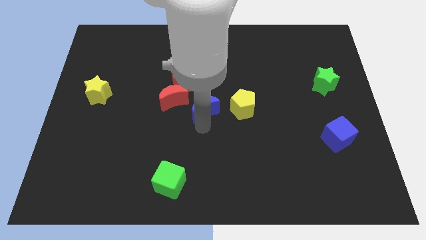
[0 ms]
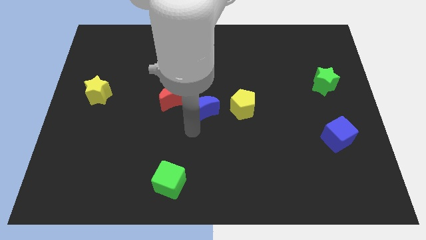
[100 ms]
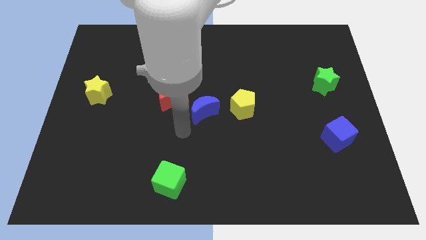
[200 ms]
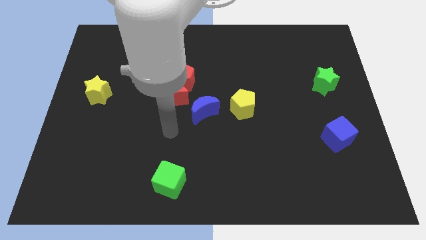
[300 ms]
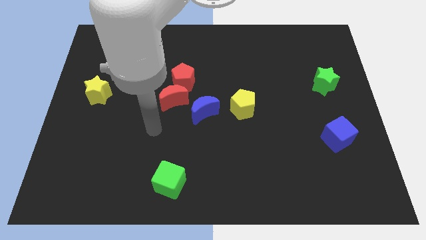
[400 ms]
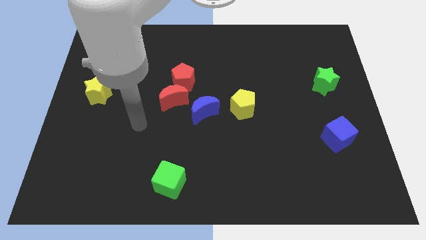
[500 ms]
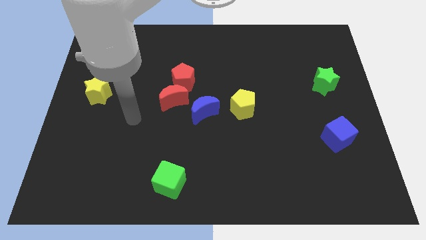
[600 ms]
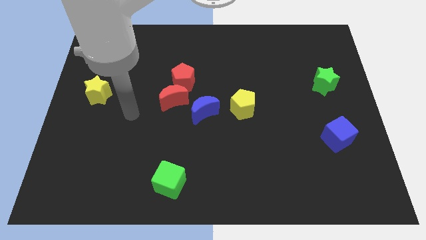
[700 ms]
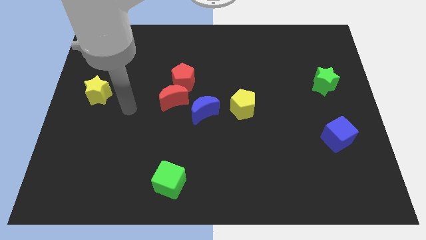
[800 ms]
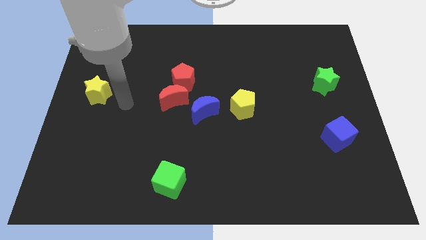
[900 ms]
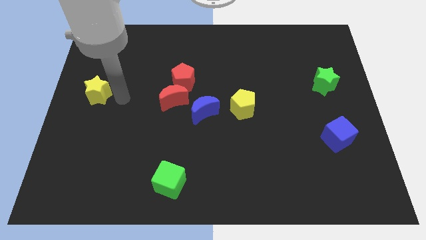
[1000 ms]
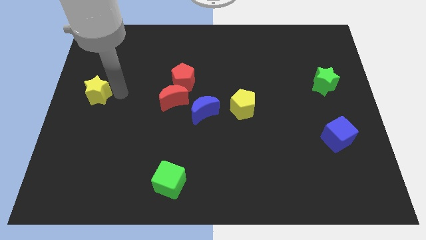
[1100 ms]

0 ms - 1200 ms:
place your arm to the right of the yellow star

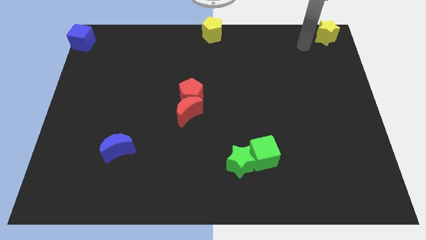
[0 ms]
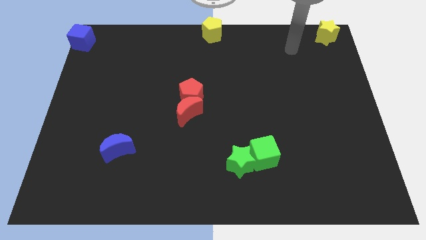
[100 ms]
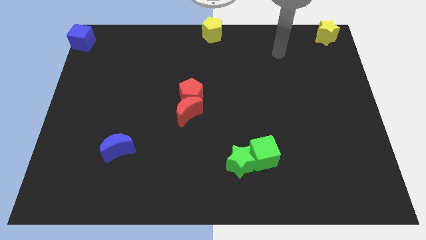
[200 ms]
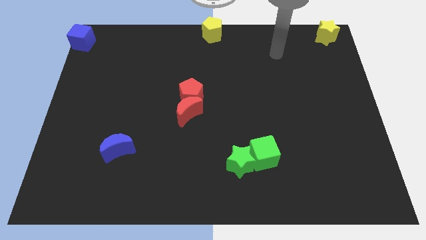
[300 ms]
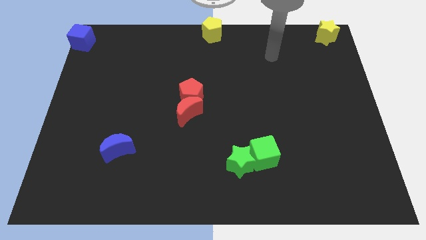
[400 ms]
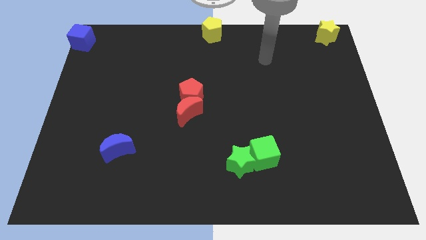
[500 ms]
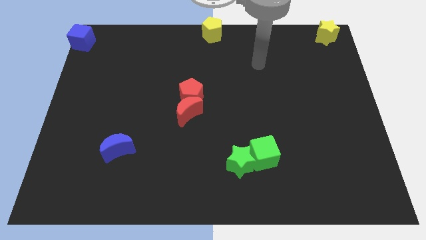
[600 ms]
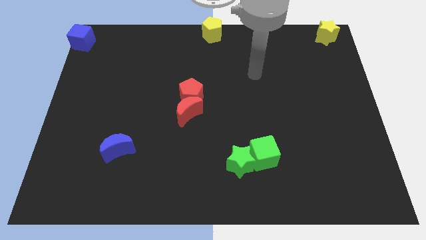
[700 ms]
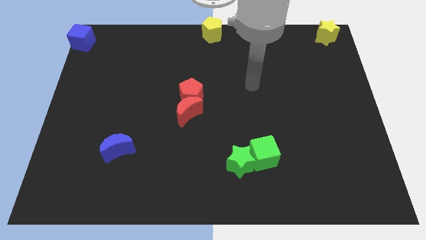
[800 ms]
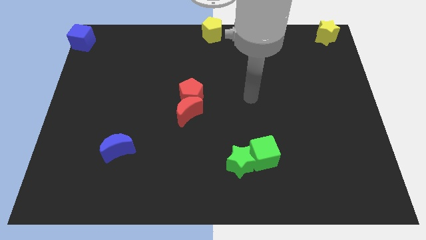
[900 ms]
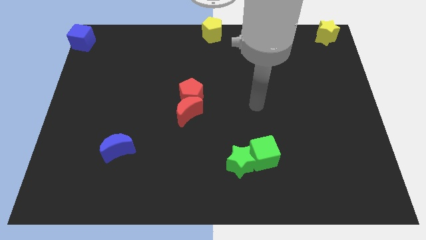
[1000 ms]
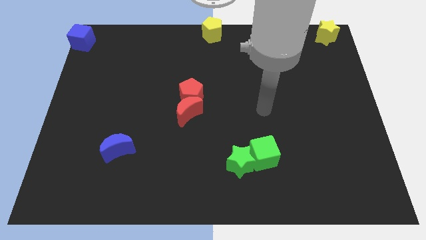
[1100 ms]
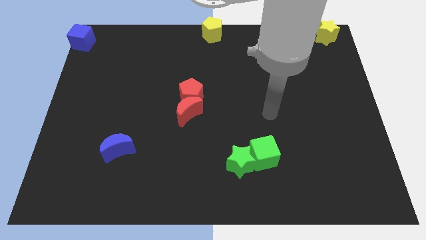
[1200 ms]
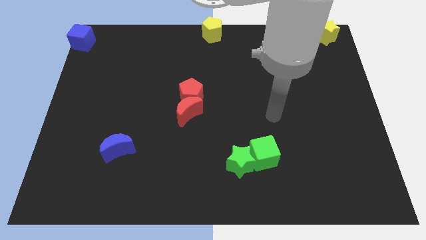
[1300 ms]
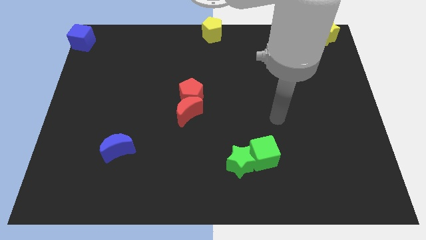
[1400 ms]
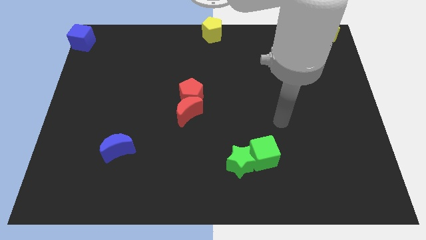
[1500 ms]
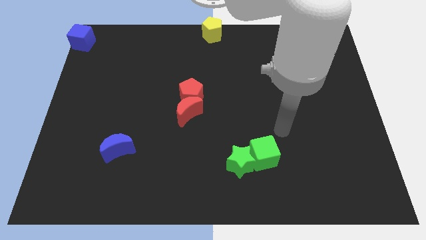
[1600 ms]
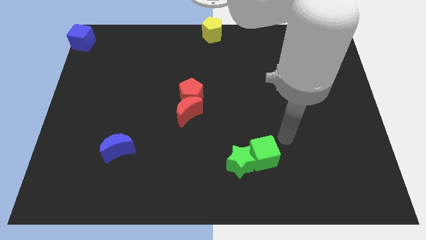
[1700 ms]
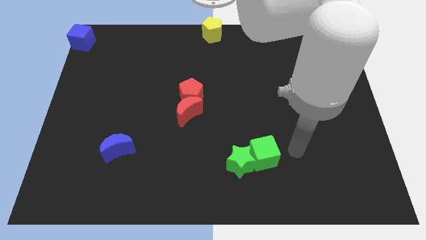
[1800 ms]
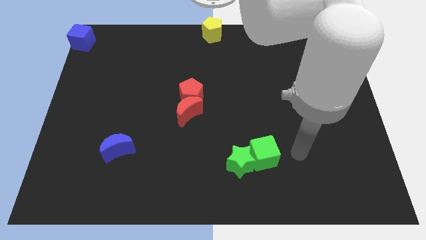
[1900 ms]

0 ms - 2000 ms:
move your arm towards green cube

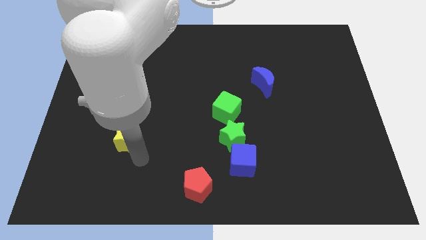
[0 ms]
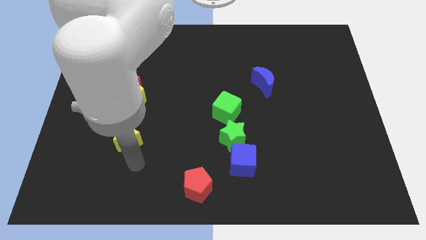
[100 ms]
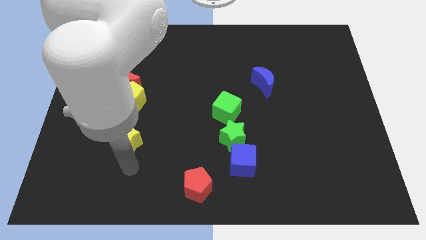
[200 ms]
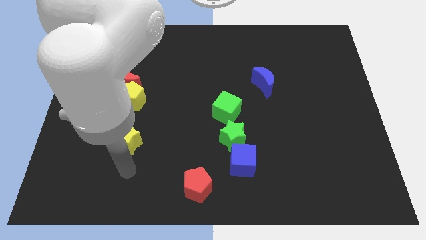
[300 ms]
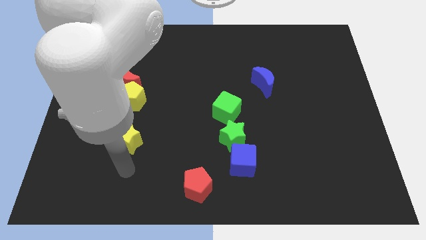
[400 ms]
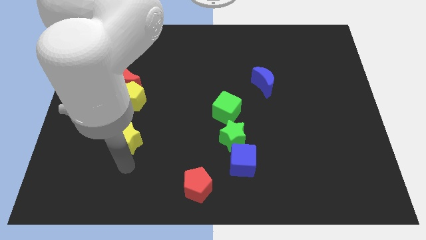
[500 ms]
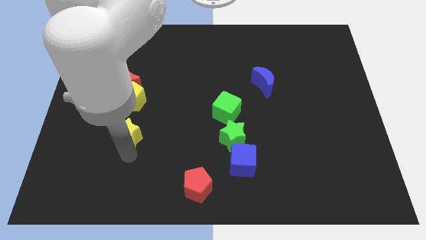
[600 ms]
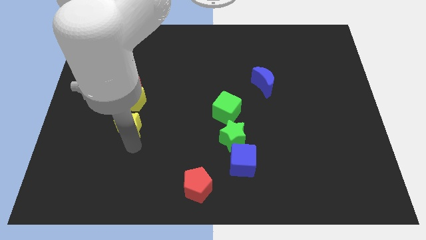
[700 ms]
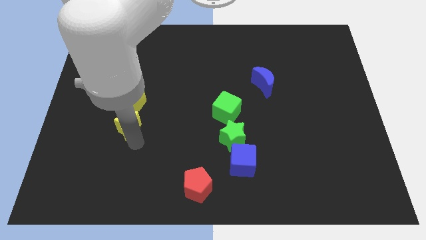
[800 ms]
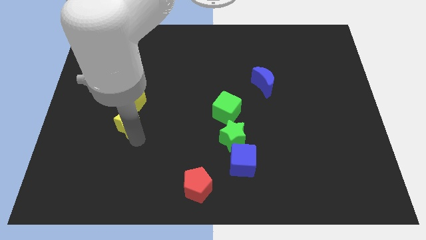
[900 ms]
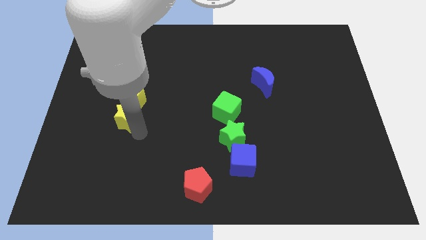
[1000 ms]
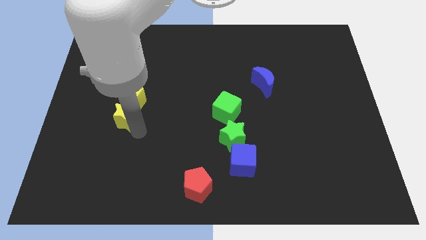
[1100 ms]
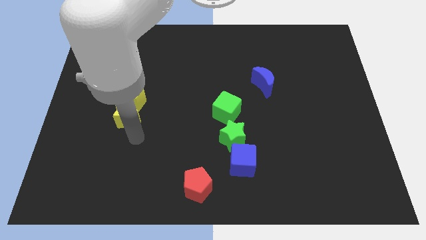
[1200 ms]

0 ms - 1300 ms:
move the yellow star close to the yellow pentagon

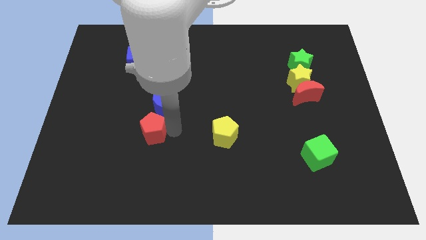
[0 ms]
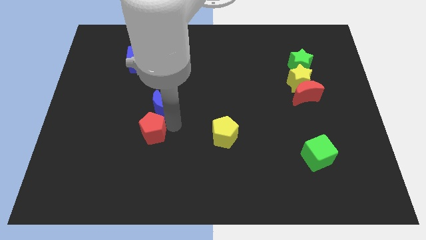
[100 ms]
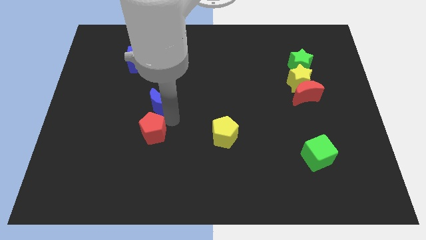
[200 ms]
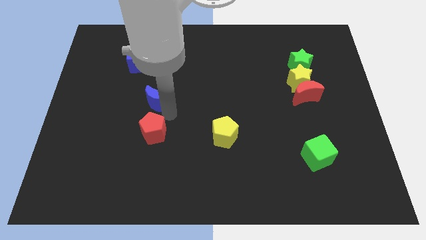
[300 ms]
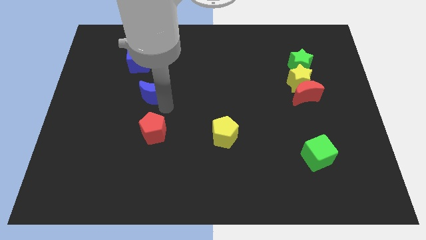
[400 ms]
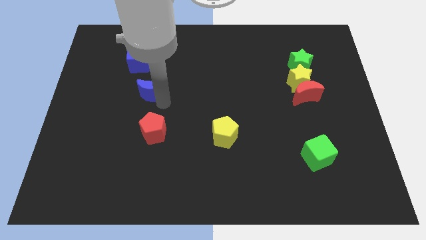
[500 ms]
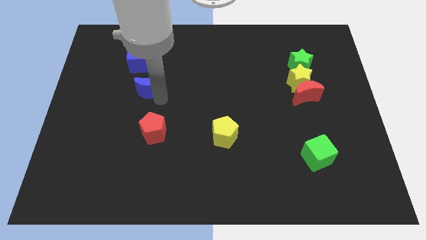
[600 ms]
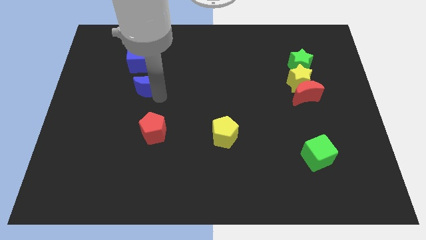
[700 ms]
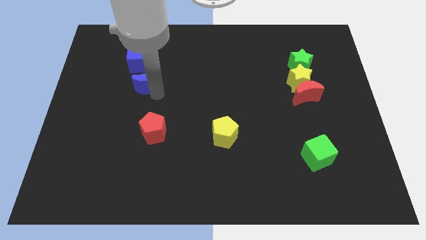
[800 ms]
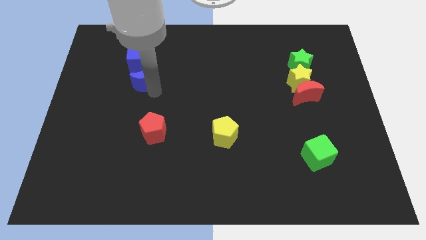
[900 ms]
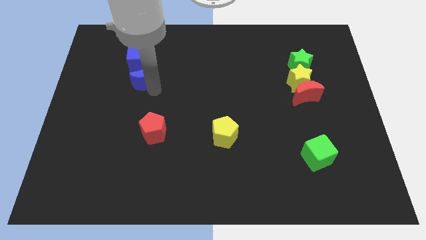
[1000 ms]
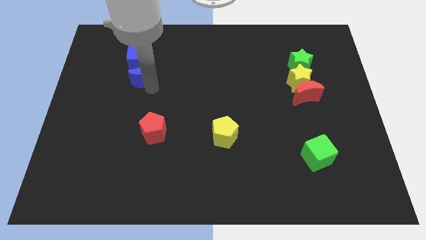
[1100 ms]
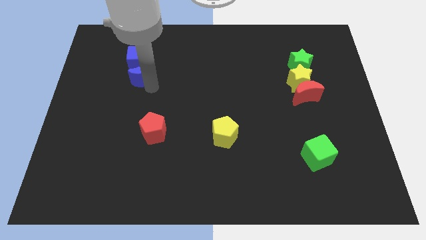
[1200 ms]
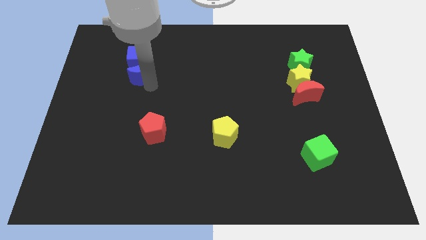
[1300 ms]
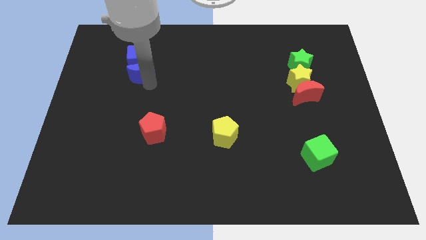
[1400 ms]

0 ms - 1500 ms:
push the blue crescent into the blue cube

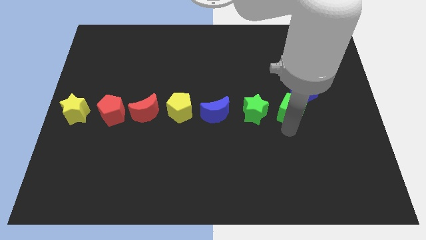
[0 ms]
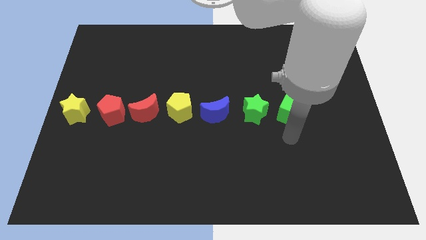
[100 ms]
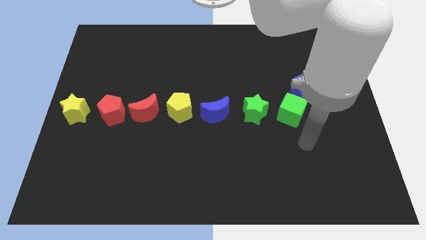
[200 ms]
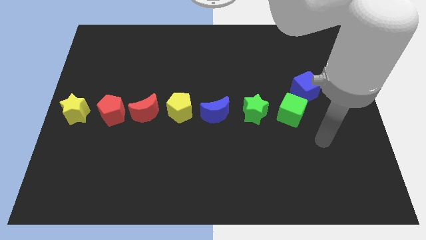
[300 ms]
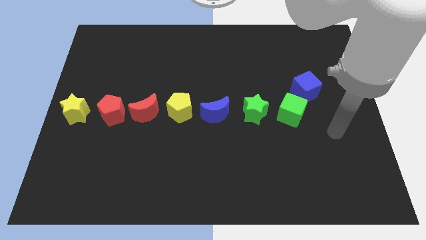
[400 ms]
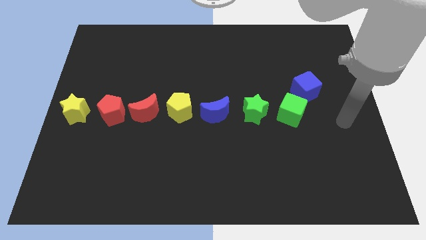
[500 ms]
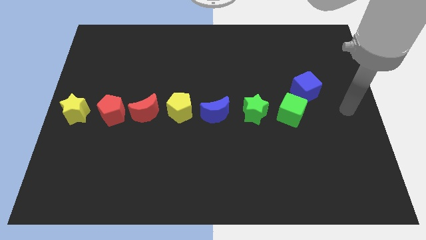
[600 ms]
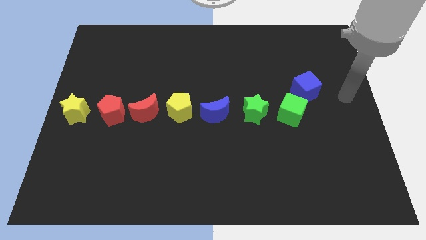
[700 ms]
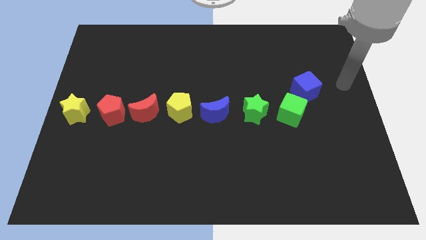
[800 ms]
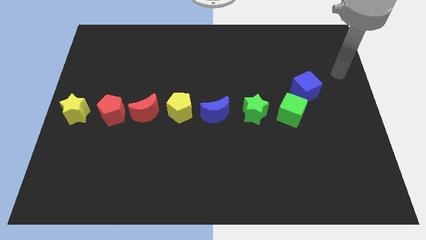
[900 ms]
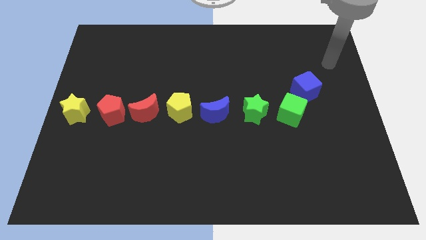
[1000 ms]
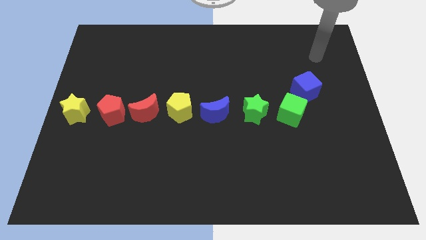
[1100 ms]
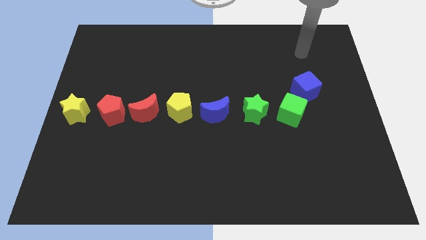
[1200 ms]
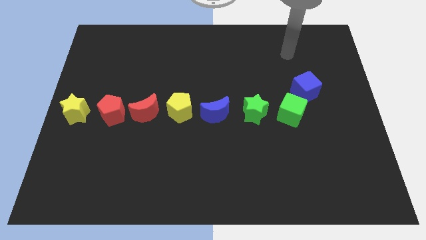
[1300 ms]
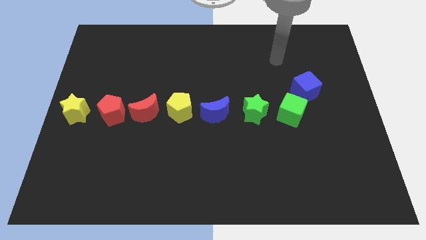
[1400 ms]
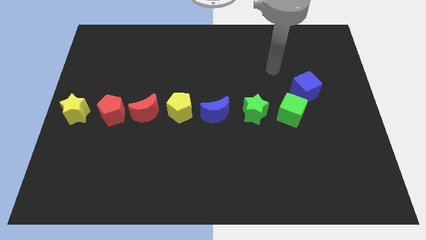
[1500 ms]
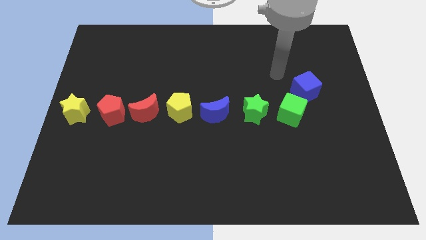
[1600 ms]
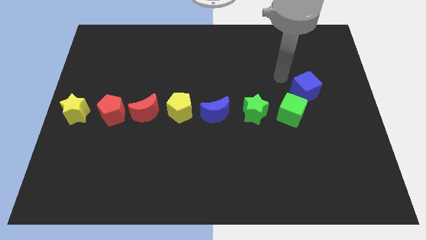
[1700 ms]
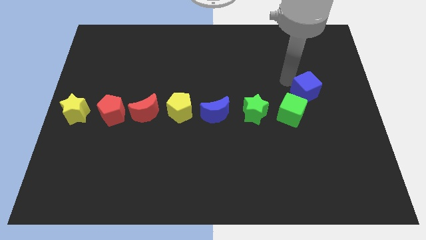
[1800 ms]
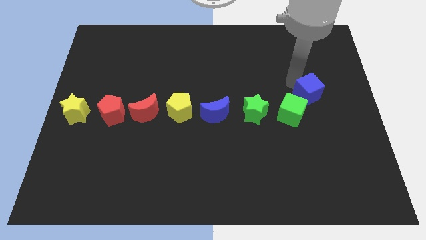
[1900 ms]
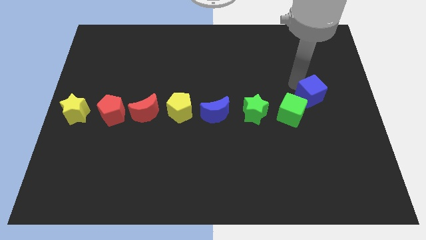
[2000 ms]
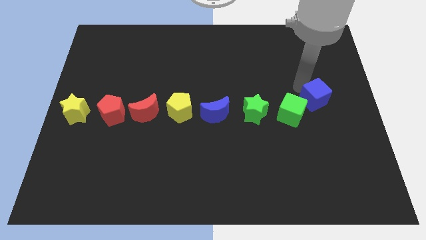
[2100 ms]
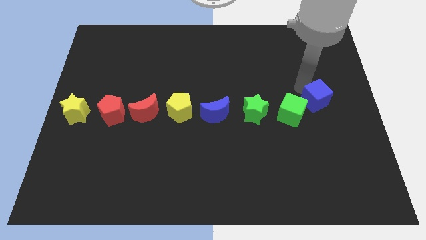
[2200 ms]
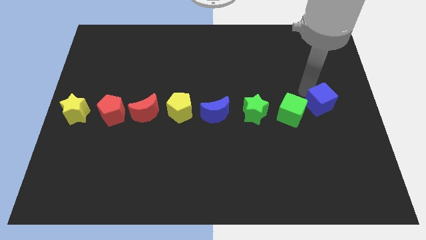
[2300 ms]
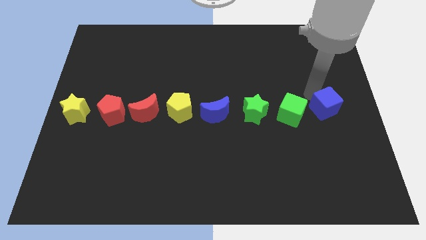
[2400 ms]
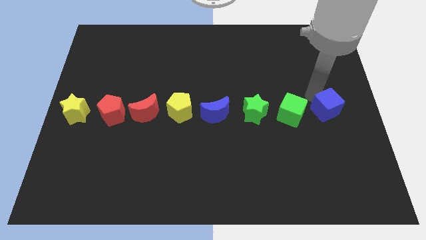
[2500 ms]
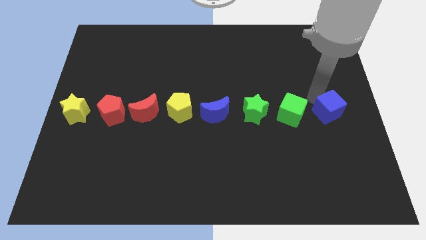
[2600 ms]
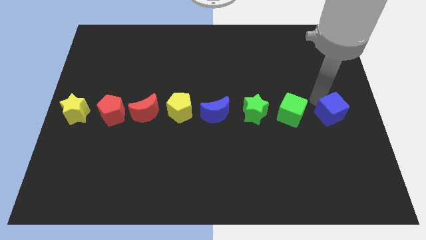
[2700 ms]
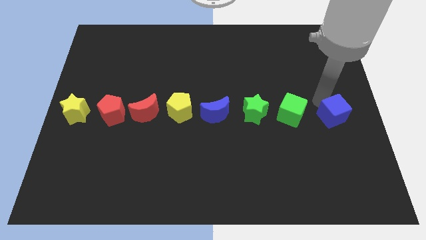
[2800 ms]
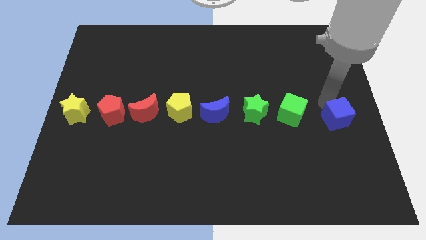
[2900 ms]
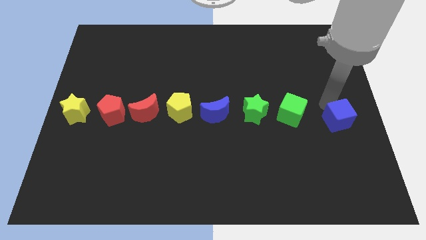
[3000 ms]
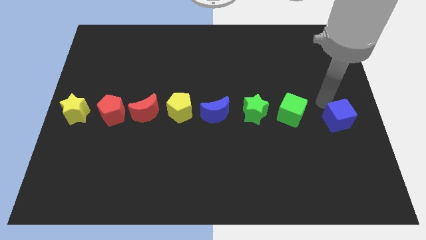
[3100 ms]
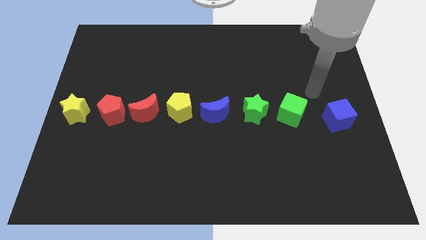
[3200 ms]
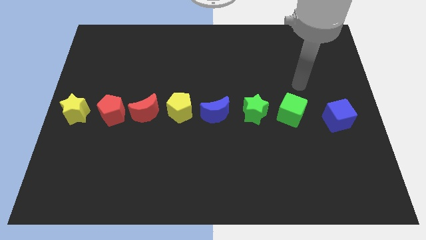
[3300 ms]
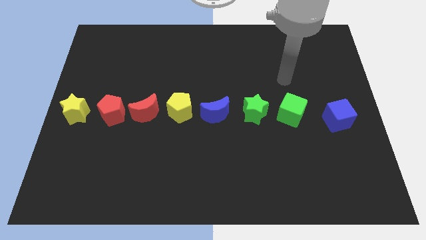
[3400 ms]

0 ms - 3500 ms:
push the blue cube to the right side of the horizontal line of blocks
